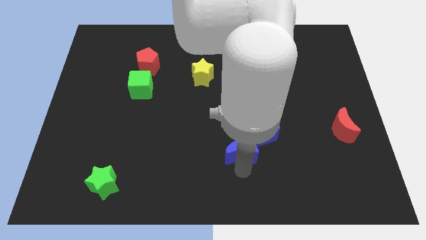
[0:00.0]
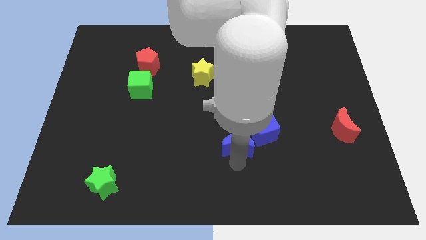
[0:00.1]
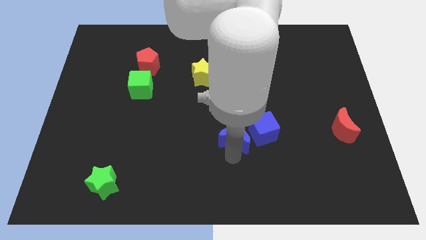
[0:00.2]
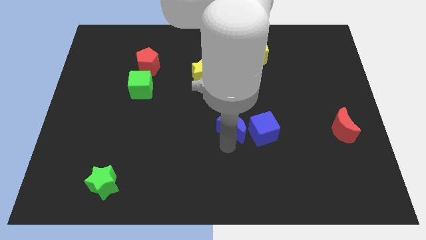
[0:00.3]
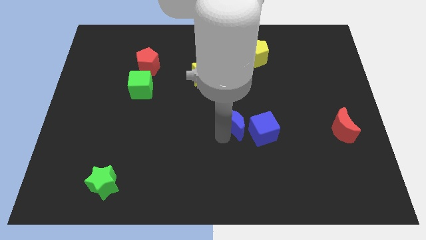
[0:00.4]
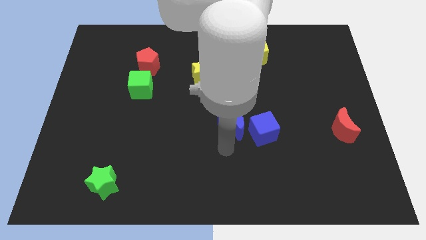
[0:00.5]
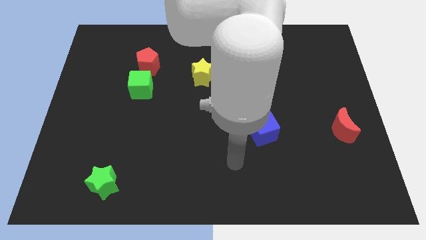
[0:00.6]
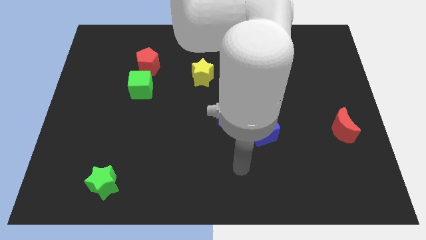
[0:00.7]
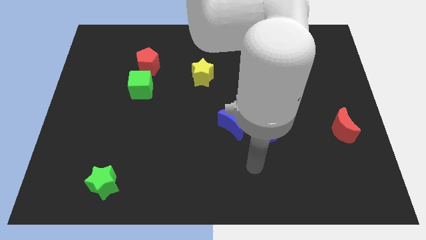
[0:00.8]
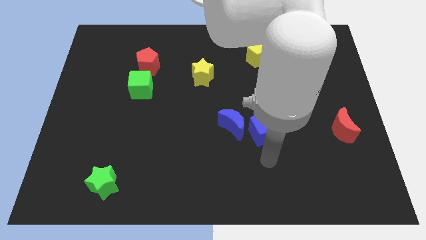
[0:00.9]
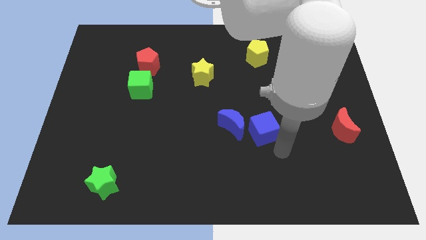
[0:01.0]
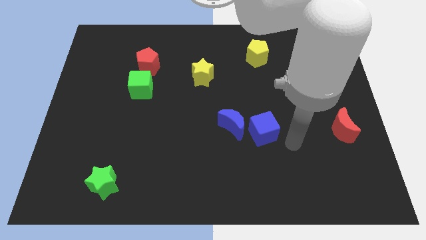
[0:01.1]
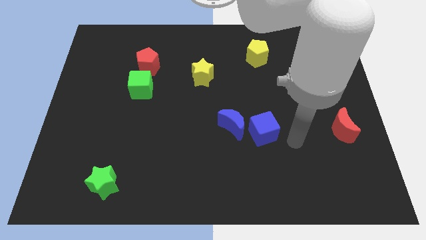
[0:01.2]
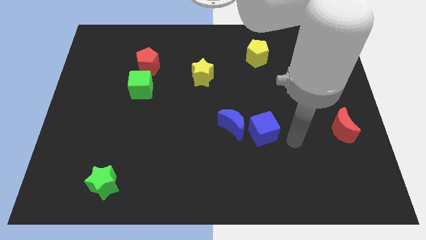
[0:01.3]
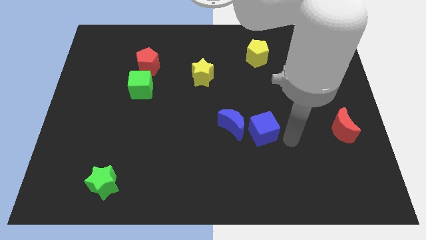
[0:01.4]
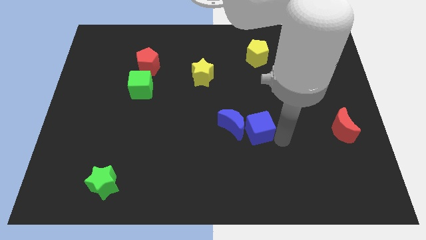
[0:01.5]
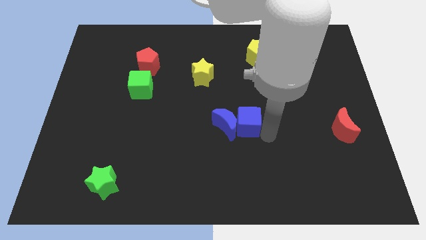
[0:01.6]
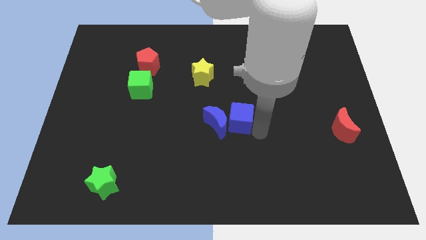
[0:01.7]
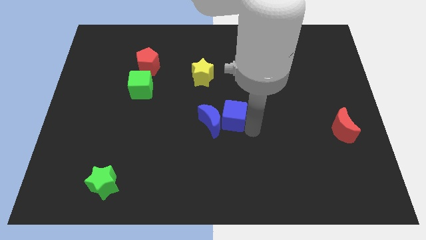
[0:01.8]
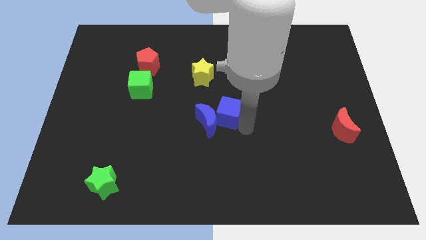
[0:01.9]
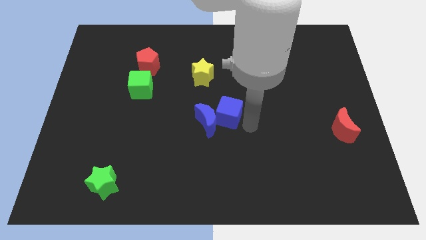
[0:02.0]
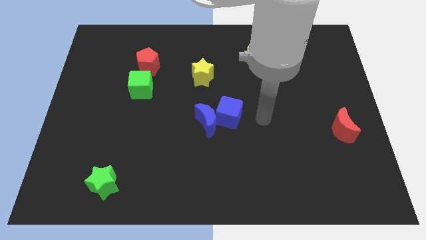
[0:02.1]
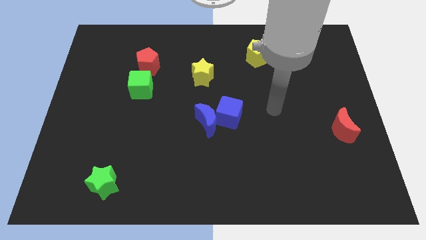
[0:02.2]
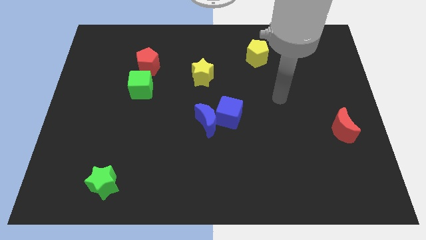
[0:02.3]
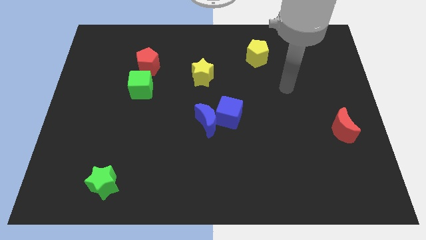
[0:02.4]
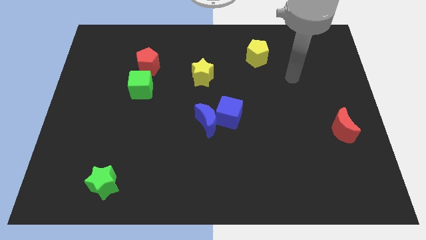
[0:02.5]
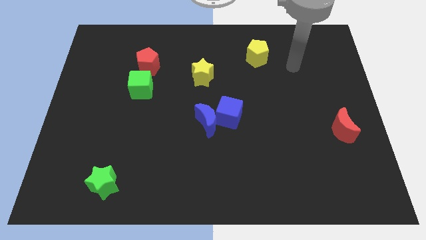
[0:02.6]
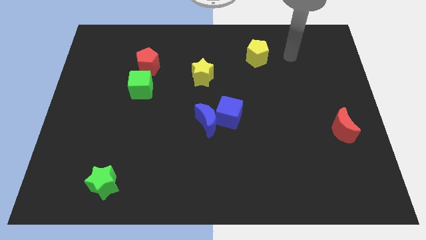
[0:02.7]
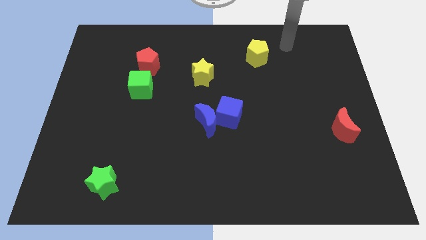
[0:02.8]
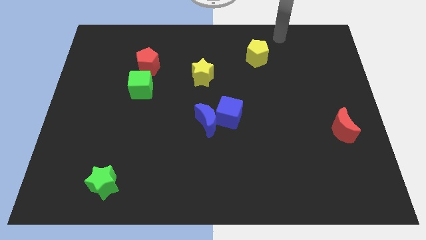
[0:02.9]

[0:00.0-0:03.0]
push the blue cube int the blue moon

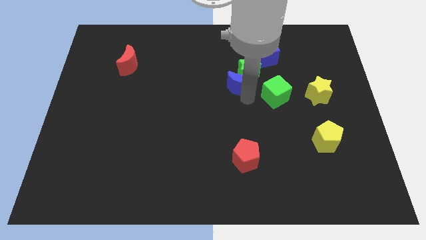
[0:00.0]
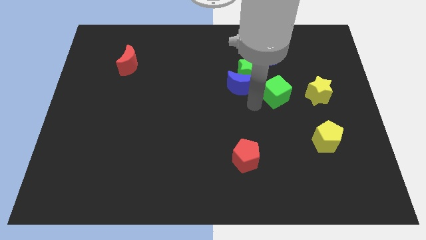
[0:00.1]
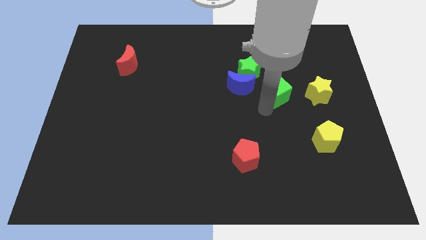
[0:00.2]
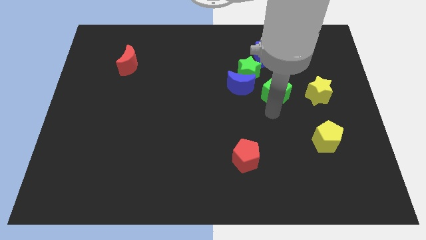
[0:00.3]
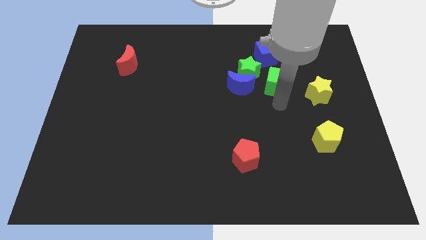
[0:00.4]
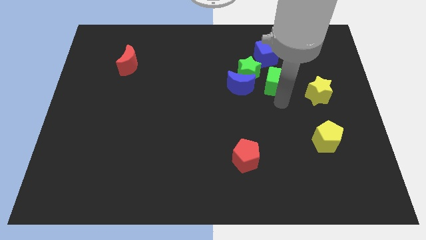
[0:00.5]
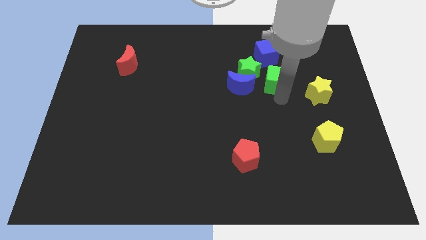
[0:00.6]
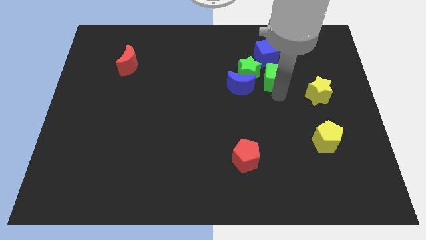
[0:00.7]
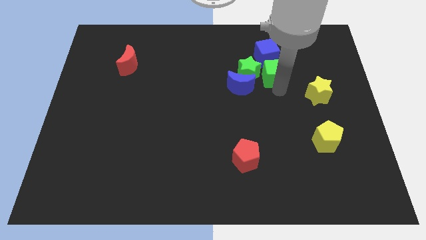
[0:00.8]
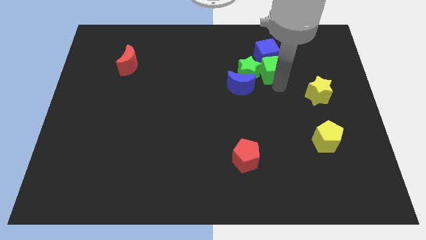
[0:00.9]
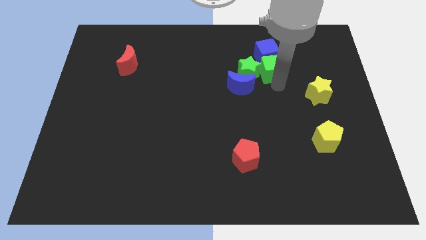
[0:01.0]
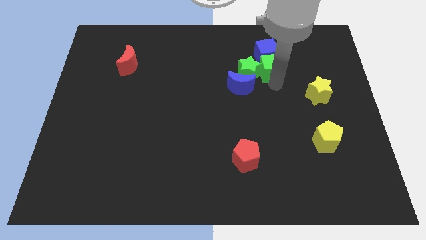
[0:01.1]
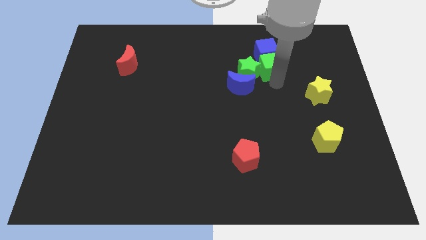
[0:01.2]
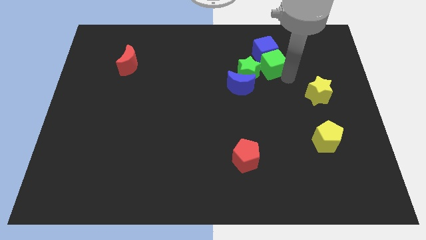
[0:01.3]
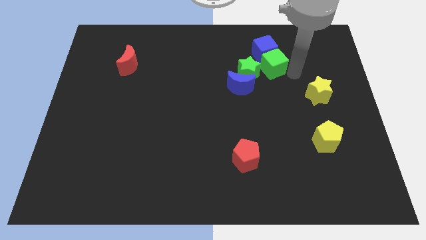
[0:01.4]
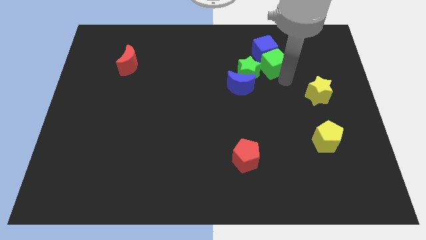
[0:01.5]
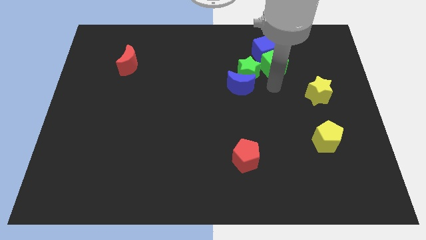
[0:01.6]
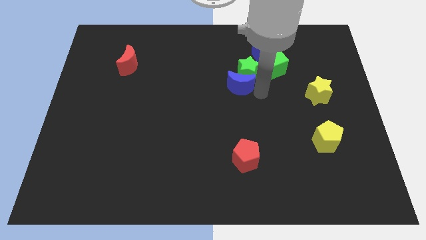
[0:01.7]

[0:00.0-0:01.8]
move green cube into blue cube

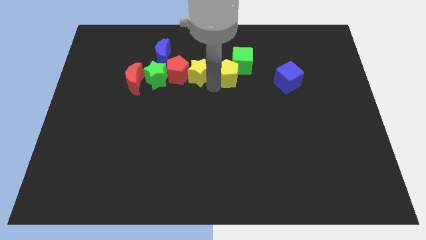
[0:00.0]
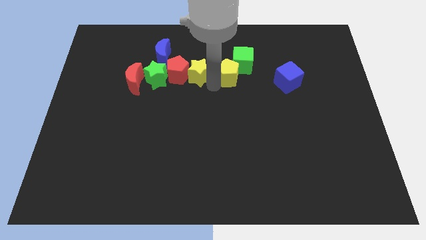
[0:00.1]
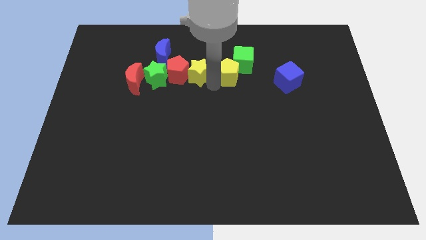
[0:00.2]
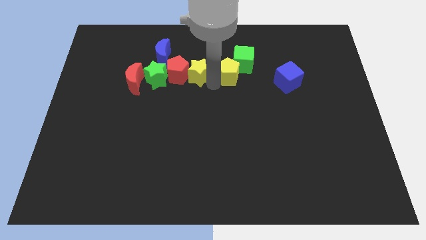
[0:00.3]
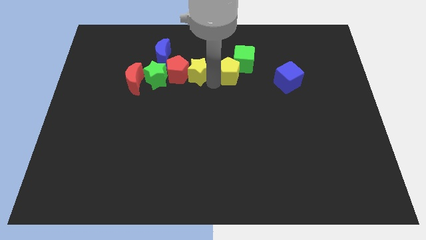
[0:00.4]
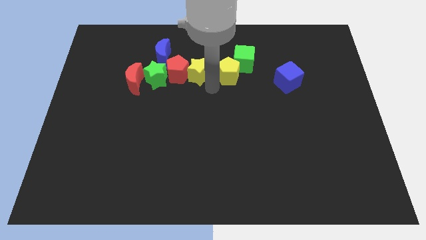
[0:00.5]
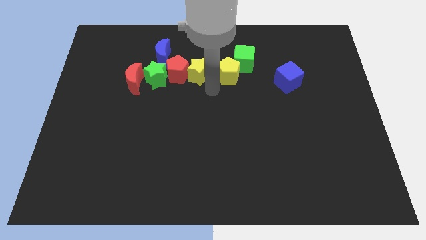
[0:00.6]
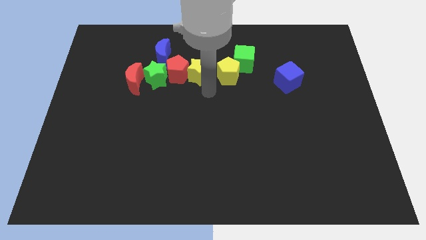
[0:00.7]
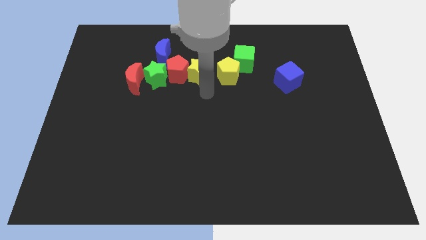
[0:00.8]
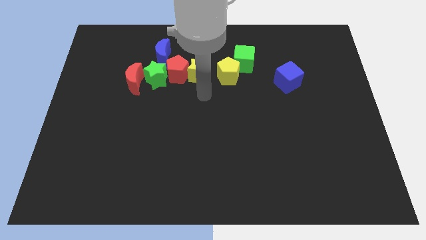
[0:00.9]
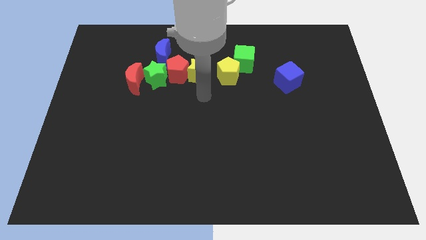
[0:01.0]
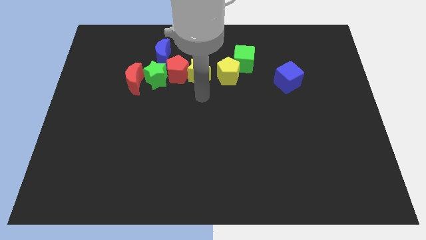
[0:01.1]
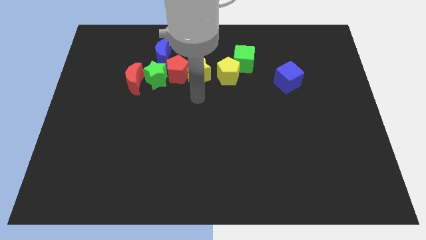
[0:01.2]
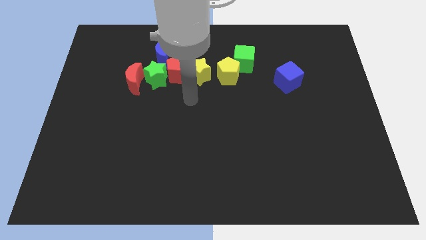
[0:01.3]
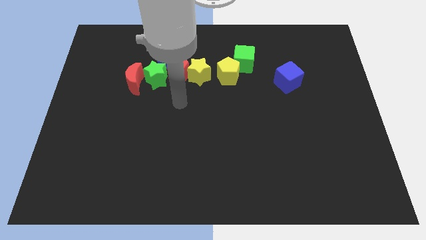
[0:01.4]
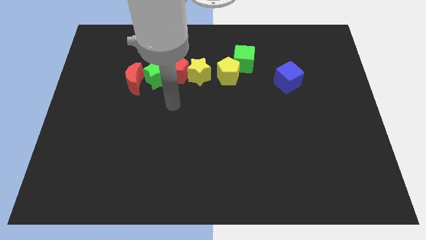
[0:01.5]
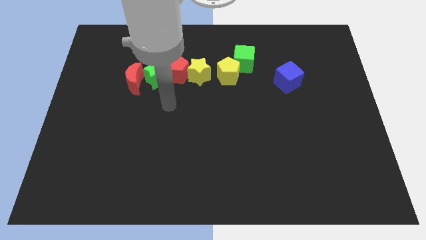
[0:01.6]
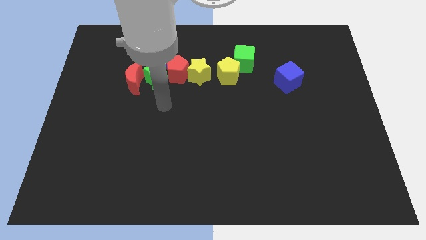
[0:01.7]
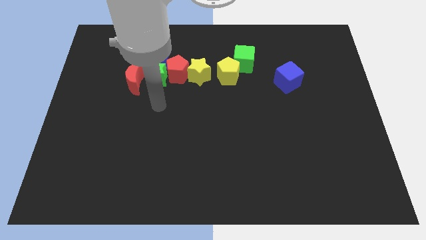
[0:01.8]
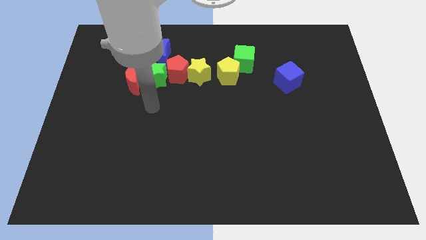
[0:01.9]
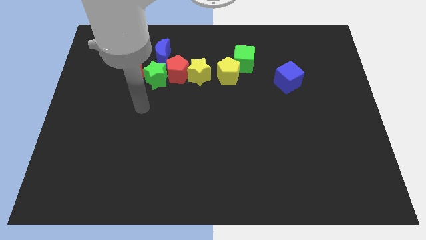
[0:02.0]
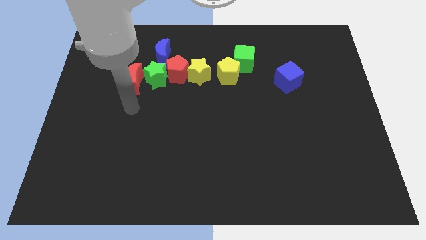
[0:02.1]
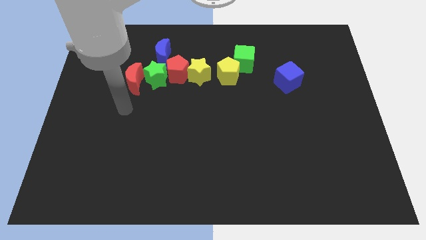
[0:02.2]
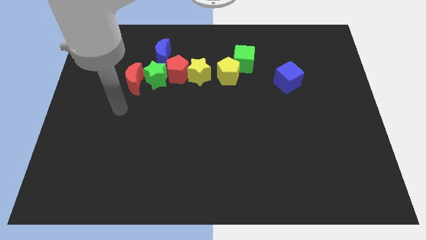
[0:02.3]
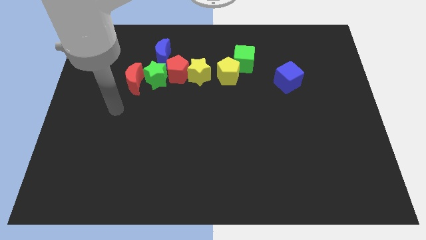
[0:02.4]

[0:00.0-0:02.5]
move your arm from yellow pentagon

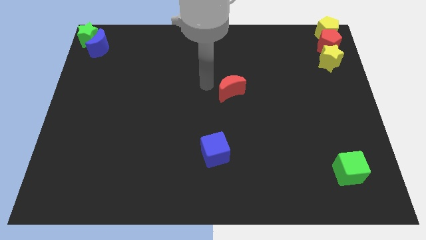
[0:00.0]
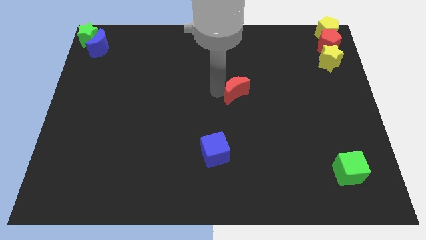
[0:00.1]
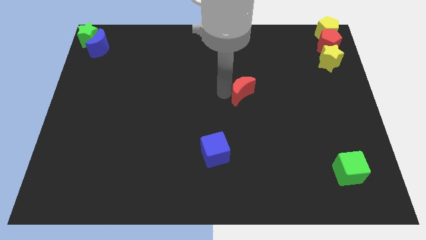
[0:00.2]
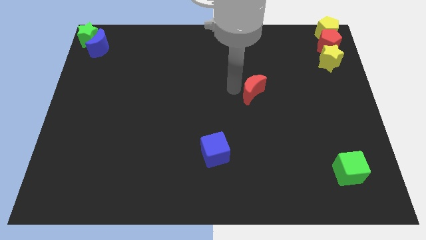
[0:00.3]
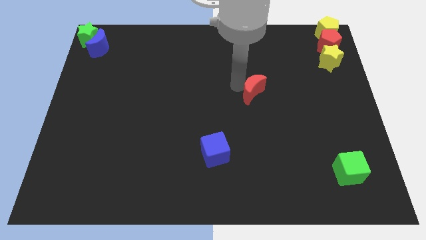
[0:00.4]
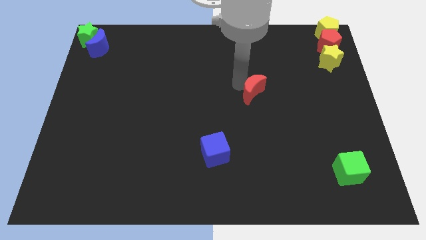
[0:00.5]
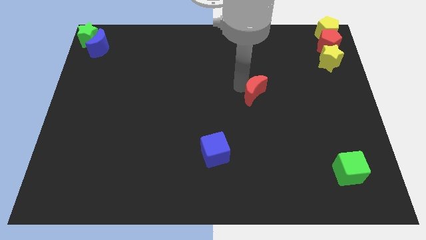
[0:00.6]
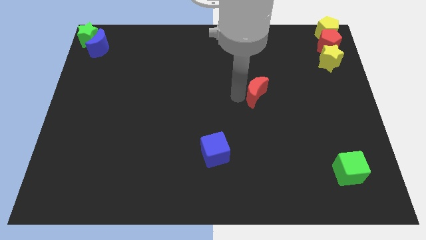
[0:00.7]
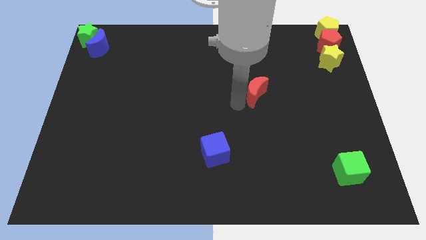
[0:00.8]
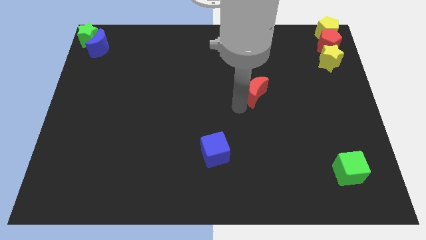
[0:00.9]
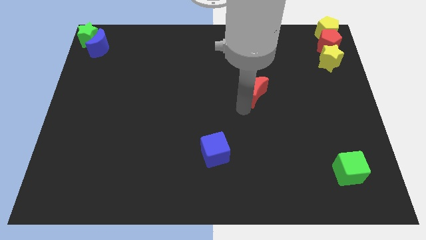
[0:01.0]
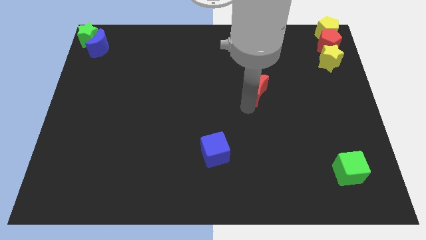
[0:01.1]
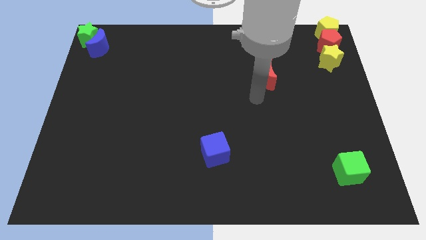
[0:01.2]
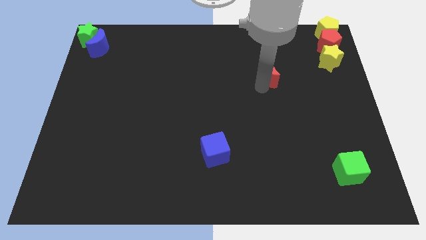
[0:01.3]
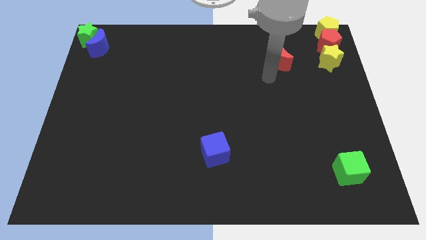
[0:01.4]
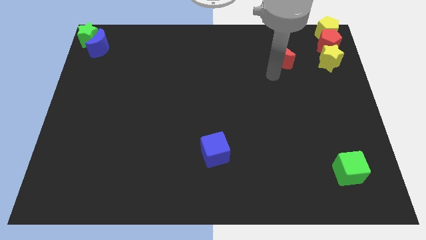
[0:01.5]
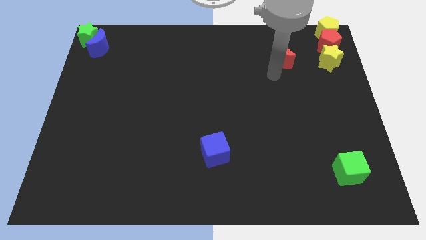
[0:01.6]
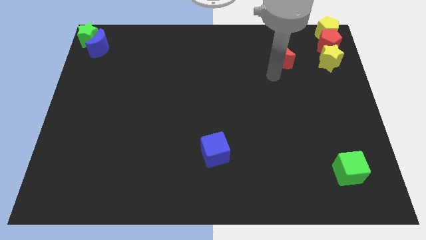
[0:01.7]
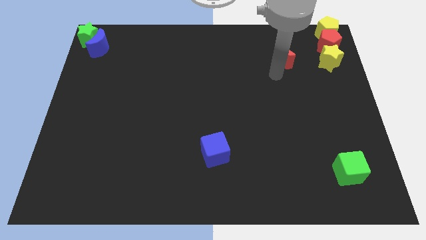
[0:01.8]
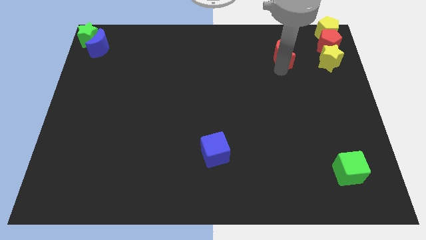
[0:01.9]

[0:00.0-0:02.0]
push the red crescent towards top

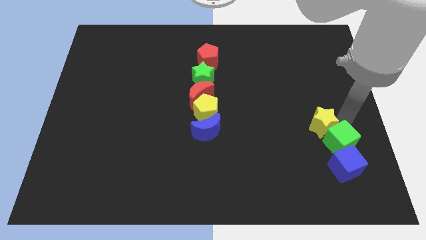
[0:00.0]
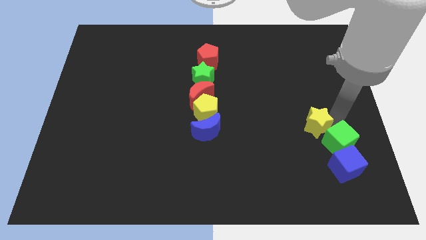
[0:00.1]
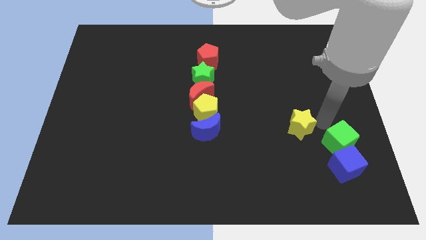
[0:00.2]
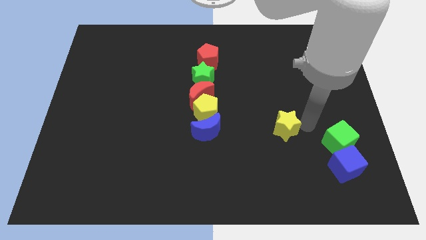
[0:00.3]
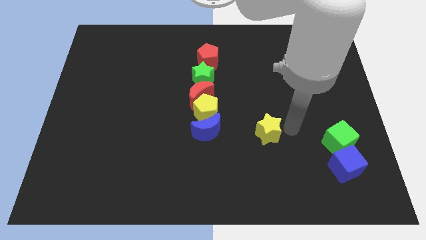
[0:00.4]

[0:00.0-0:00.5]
separate the yellow star from the green cube
